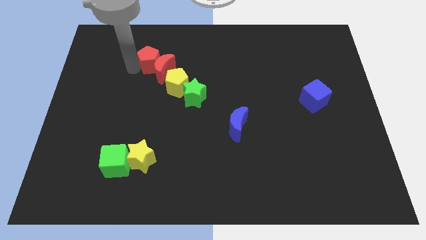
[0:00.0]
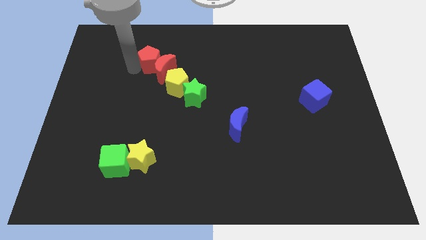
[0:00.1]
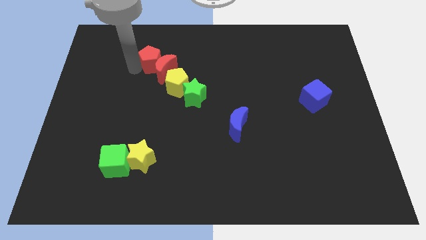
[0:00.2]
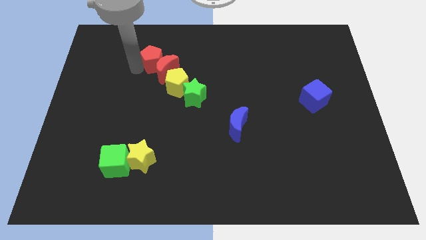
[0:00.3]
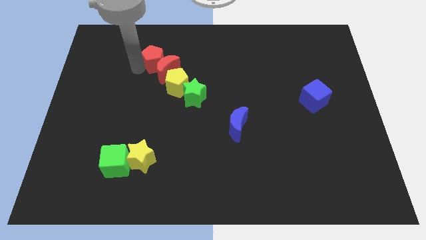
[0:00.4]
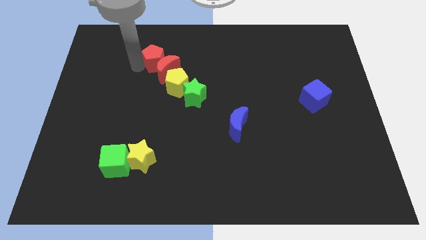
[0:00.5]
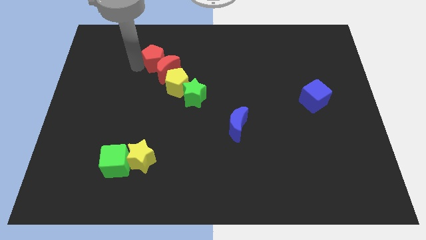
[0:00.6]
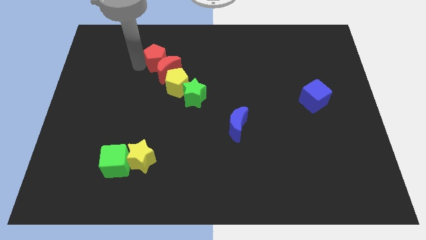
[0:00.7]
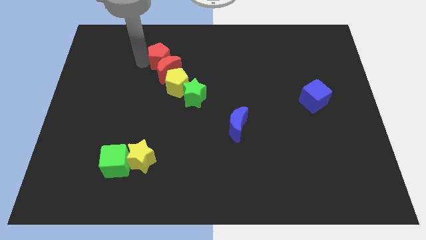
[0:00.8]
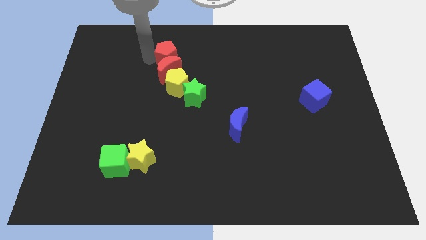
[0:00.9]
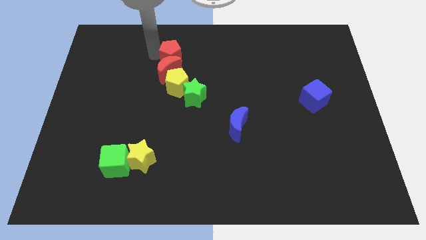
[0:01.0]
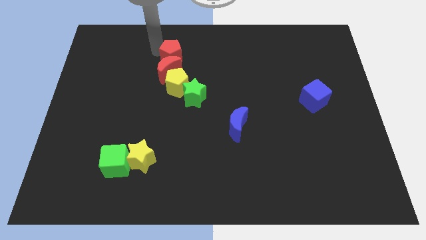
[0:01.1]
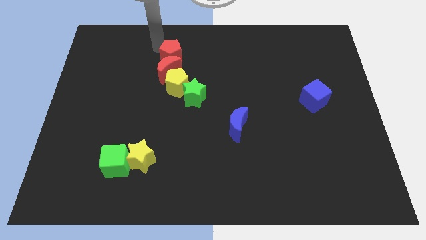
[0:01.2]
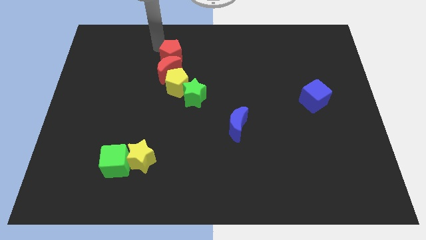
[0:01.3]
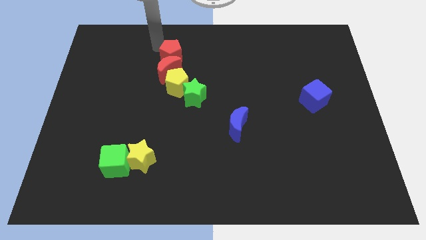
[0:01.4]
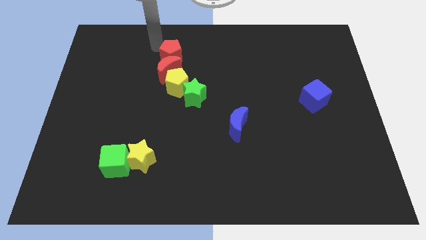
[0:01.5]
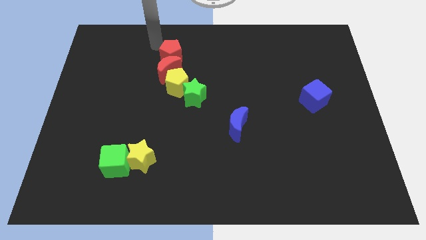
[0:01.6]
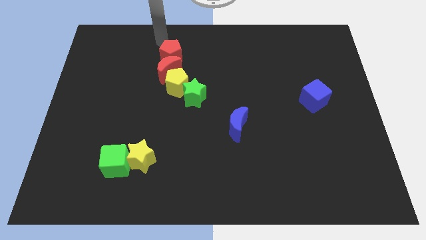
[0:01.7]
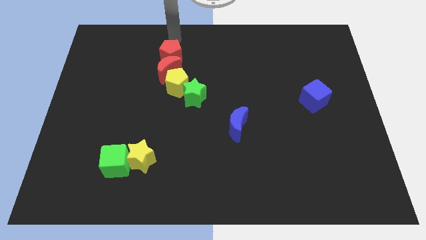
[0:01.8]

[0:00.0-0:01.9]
push red pentagon into the red crescent

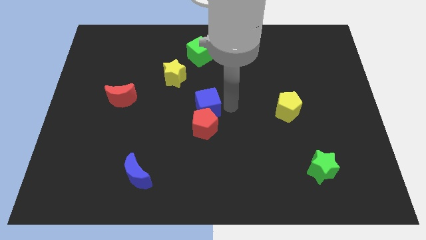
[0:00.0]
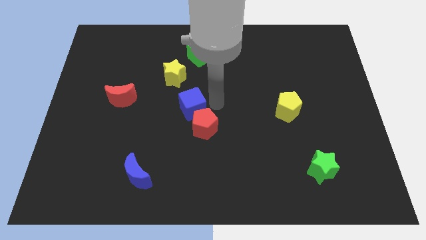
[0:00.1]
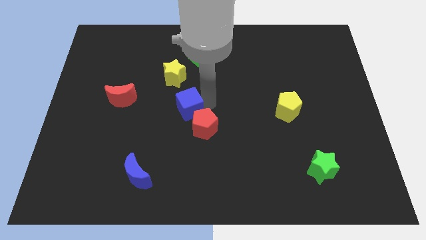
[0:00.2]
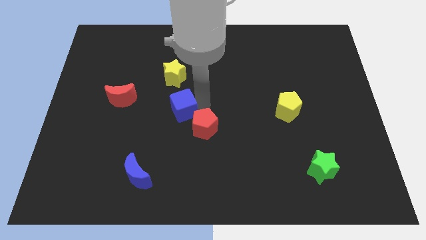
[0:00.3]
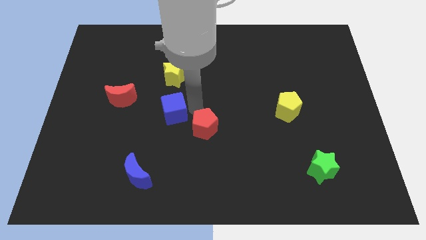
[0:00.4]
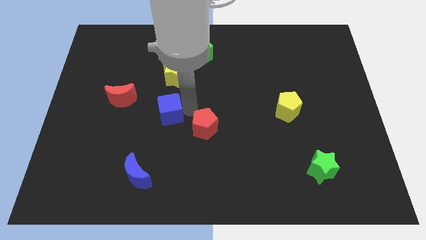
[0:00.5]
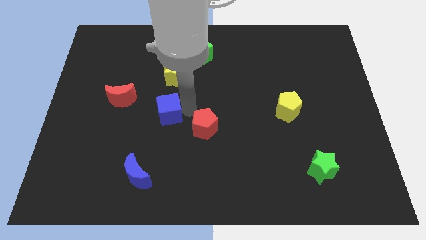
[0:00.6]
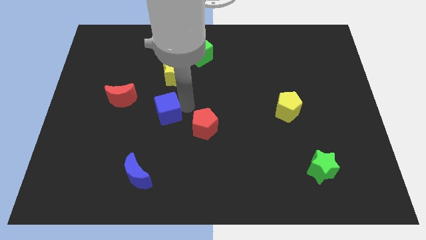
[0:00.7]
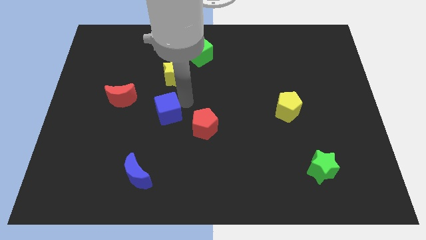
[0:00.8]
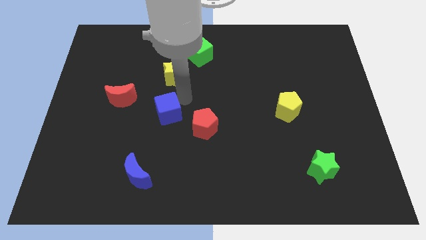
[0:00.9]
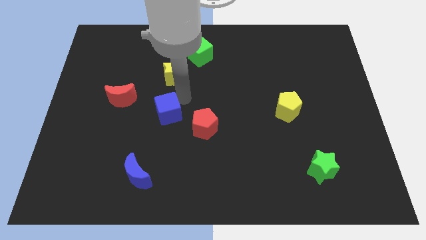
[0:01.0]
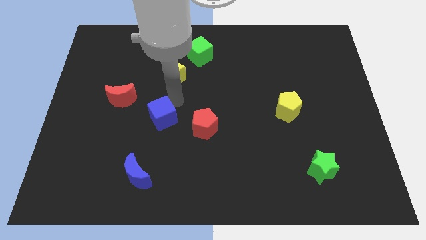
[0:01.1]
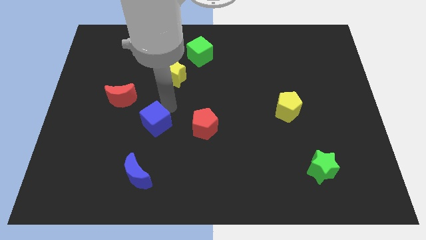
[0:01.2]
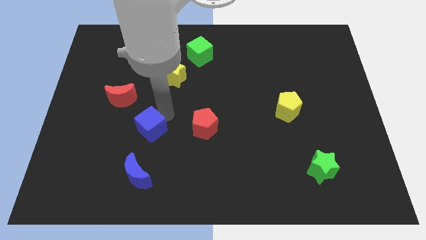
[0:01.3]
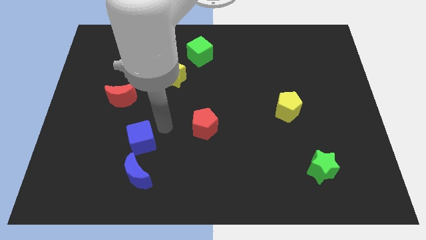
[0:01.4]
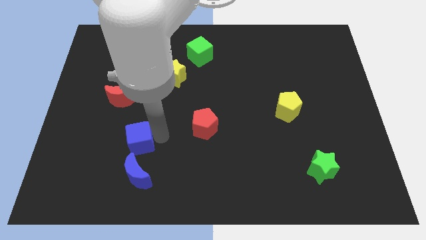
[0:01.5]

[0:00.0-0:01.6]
place the blue cube above the blue crescent

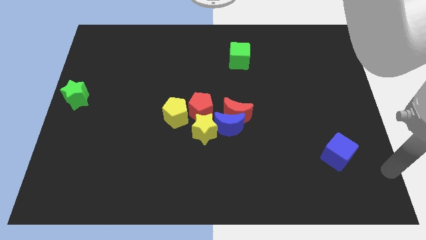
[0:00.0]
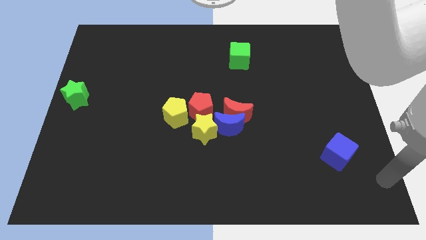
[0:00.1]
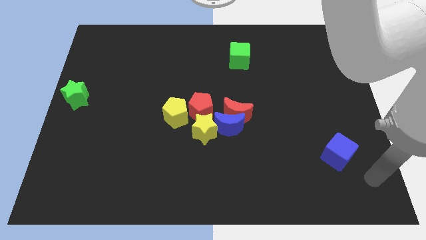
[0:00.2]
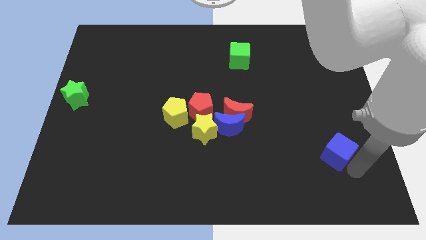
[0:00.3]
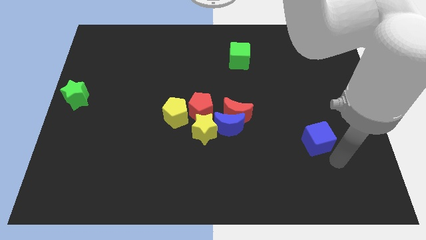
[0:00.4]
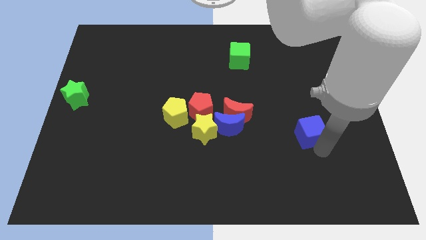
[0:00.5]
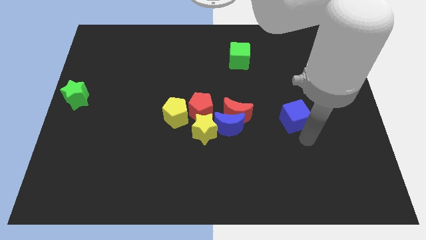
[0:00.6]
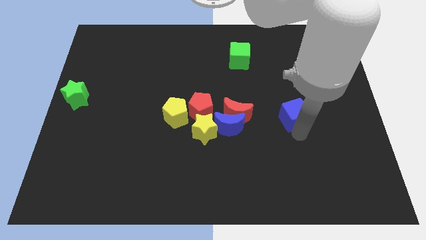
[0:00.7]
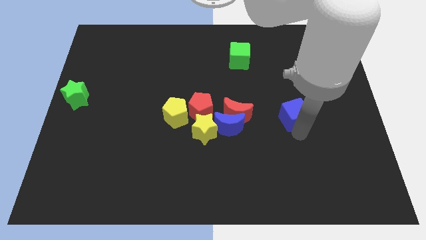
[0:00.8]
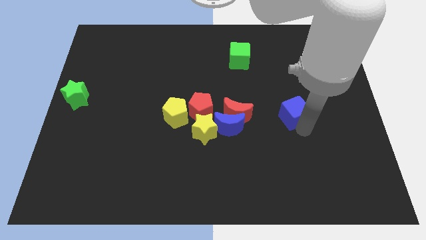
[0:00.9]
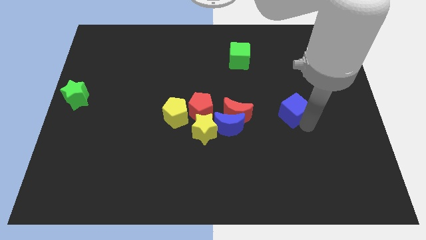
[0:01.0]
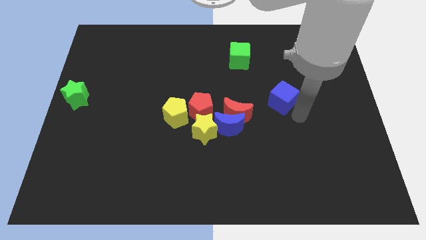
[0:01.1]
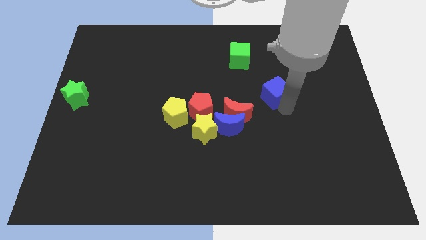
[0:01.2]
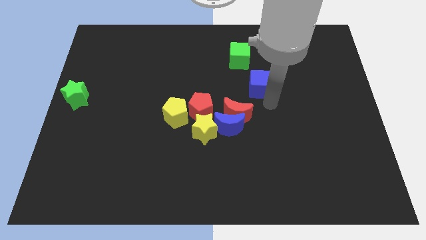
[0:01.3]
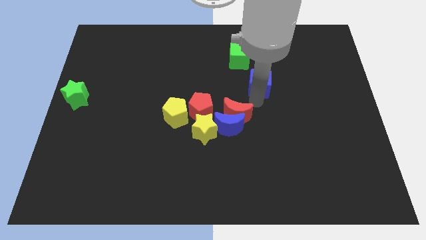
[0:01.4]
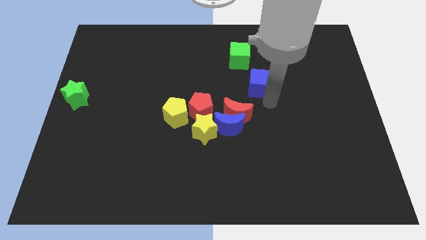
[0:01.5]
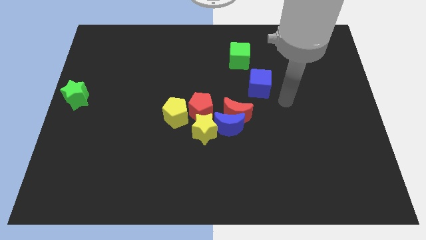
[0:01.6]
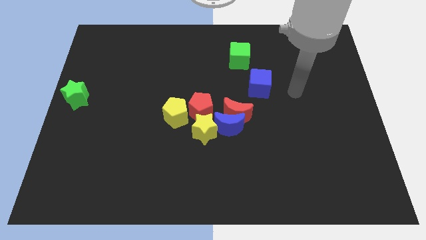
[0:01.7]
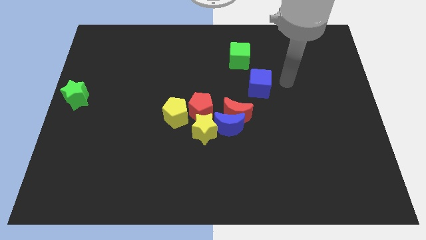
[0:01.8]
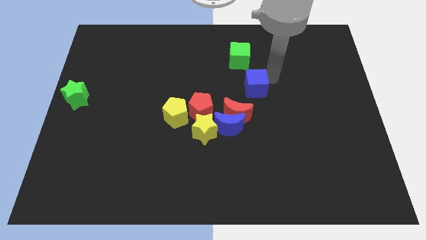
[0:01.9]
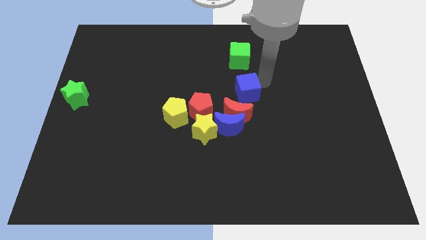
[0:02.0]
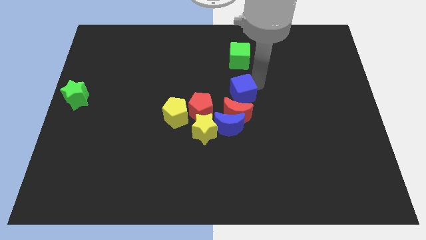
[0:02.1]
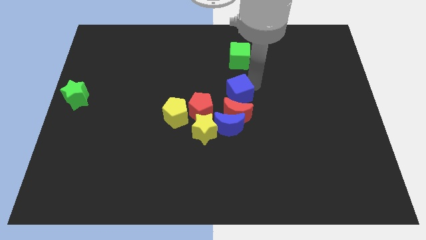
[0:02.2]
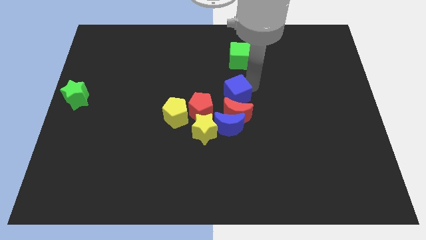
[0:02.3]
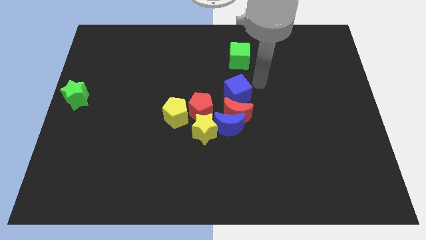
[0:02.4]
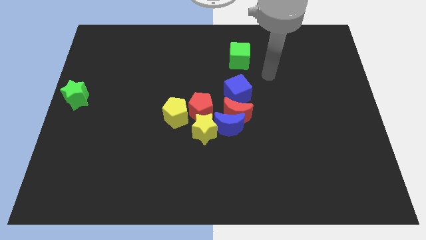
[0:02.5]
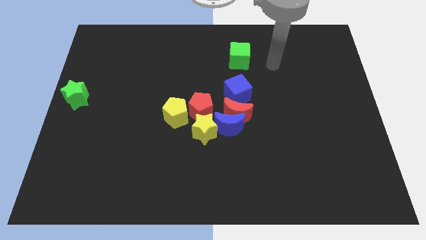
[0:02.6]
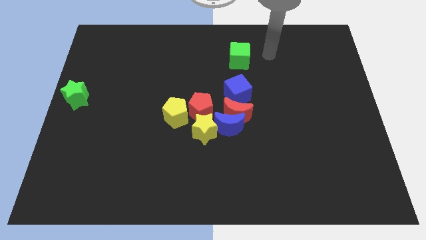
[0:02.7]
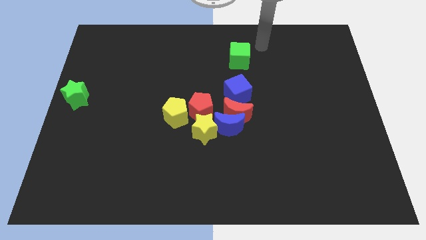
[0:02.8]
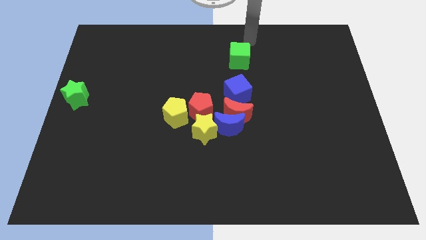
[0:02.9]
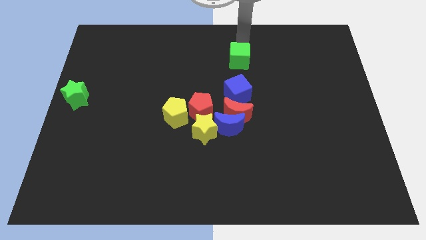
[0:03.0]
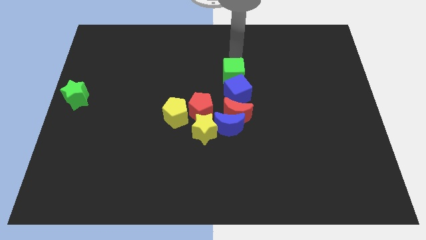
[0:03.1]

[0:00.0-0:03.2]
slide the blue cube vertically below the green cube

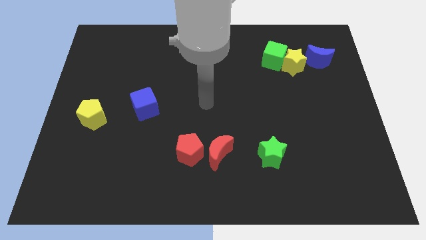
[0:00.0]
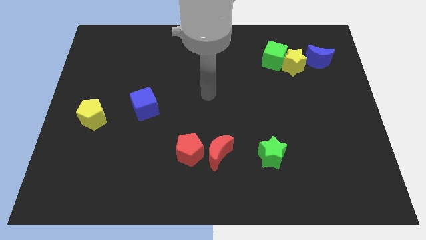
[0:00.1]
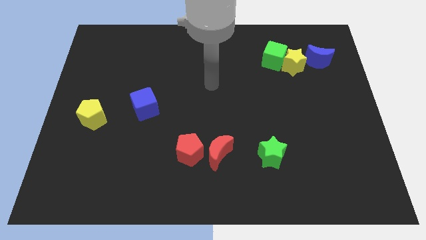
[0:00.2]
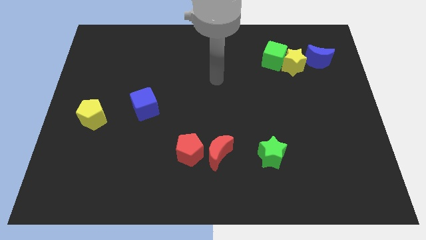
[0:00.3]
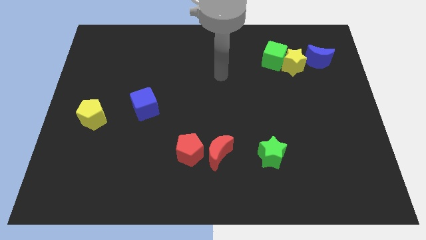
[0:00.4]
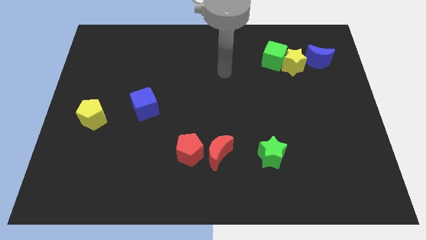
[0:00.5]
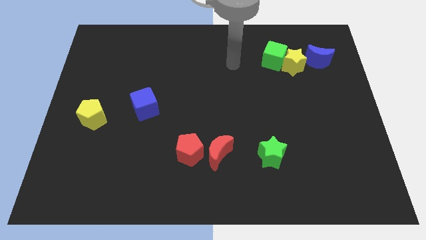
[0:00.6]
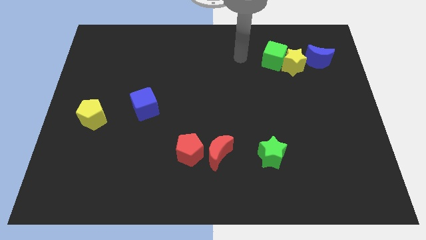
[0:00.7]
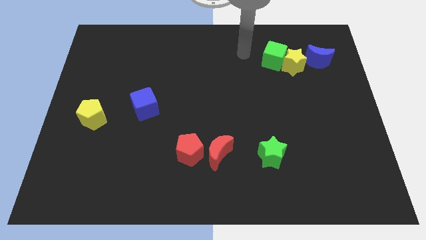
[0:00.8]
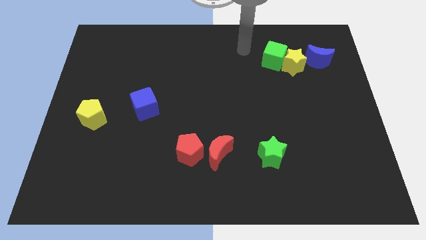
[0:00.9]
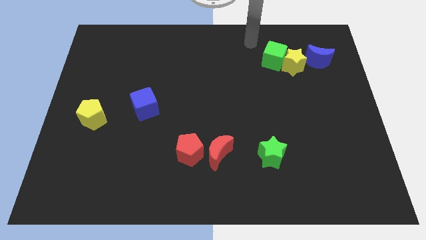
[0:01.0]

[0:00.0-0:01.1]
move arm towards green cube

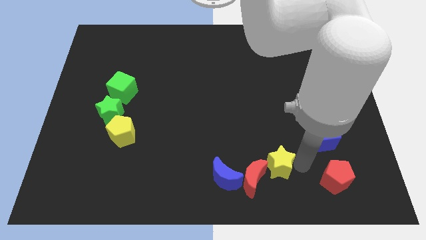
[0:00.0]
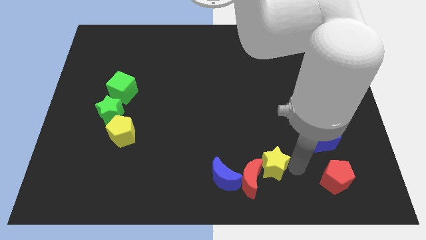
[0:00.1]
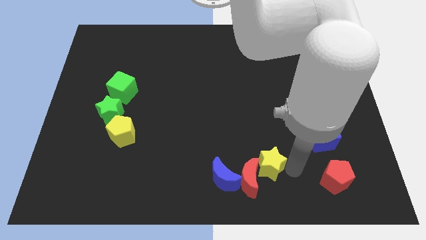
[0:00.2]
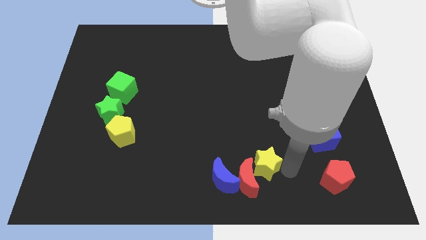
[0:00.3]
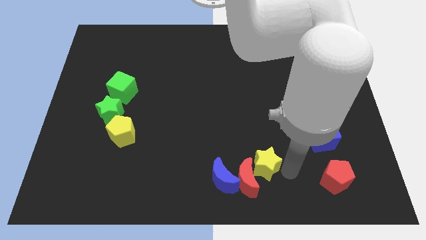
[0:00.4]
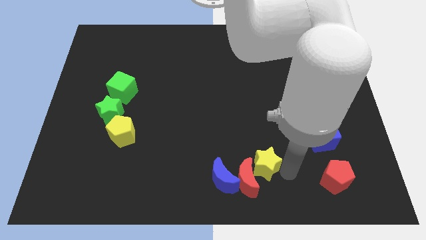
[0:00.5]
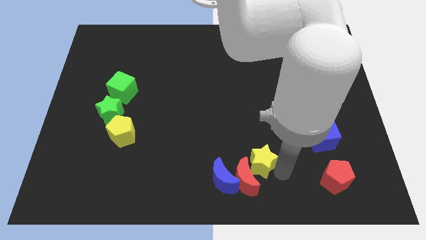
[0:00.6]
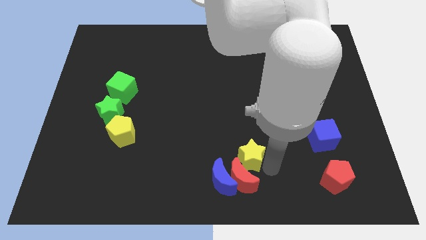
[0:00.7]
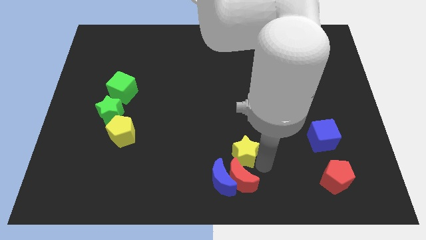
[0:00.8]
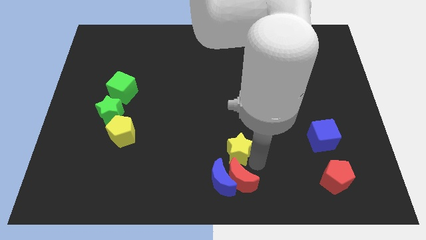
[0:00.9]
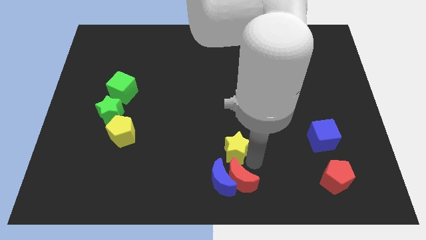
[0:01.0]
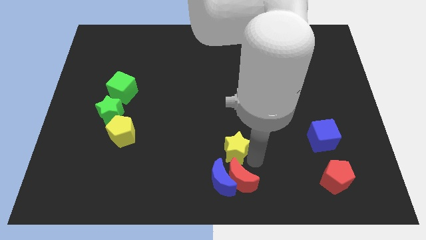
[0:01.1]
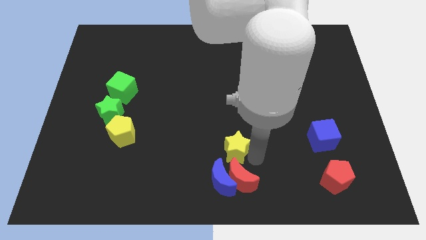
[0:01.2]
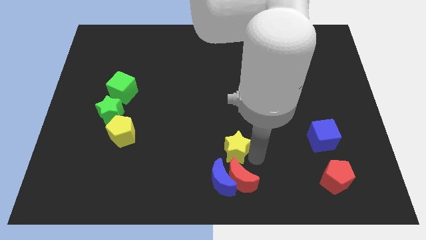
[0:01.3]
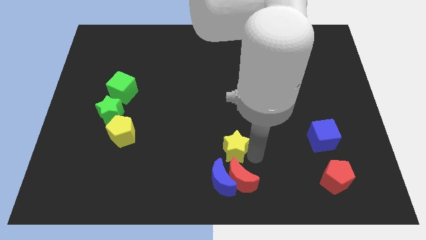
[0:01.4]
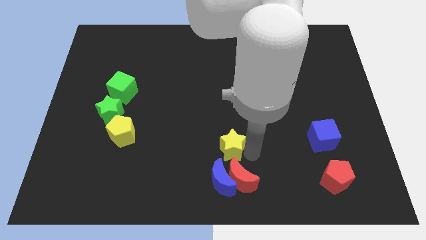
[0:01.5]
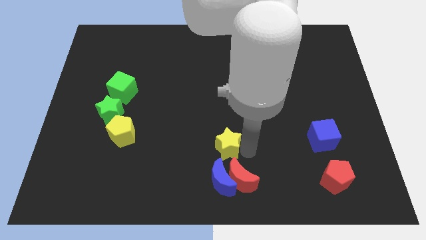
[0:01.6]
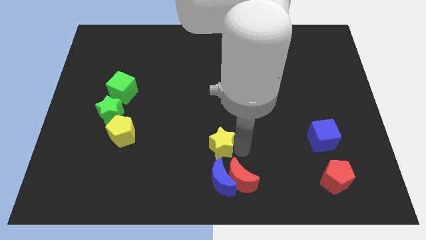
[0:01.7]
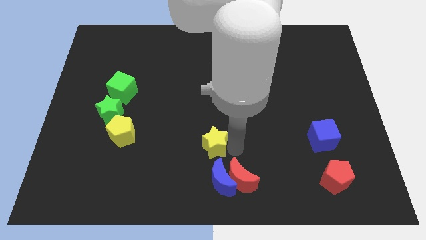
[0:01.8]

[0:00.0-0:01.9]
move the yellow star to the top of the blue crescent
